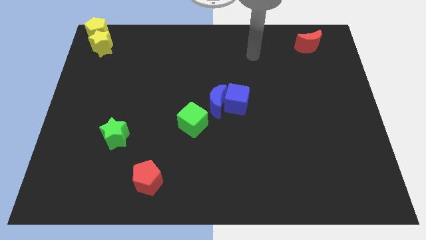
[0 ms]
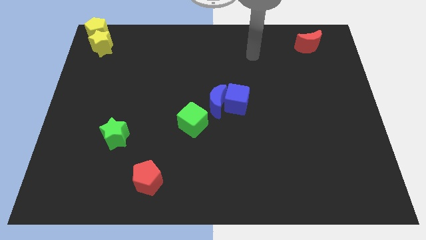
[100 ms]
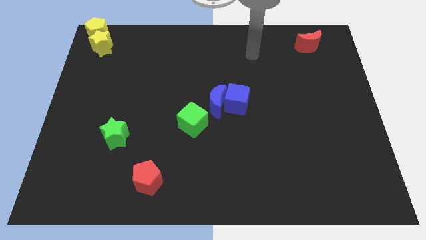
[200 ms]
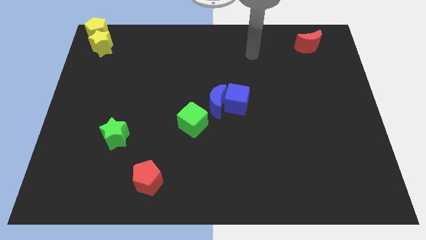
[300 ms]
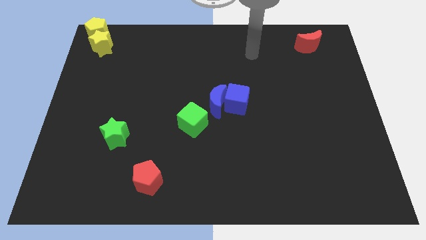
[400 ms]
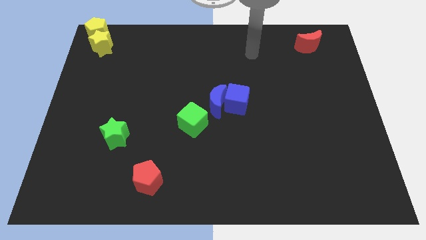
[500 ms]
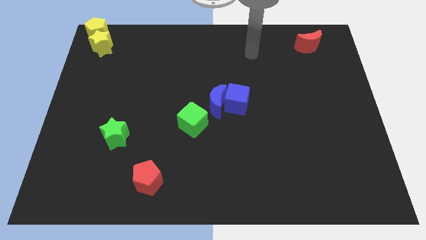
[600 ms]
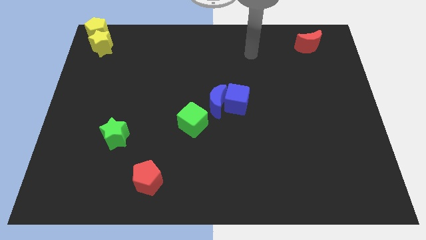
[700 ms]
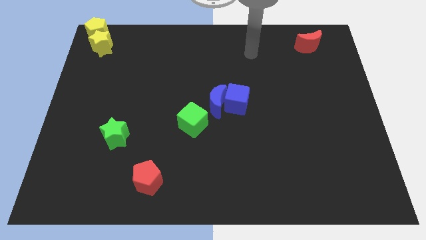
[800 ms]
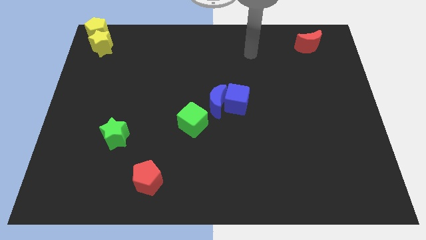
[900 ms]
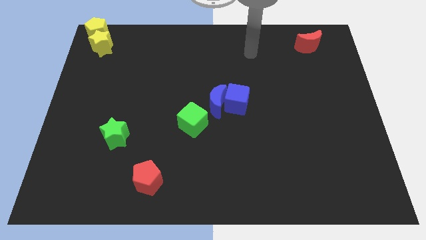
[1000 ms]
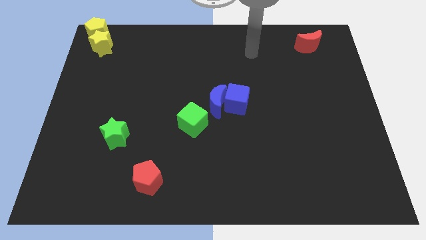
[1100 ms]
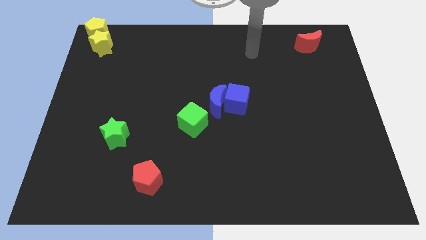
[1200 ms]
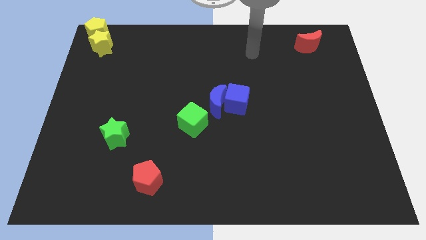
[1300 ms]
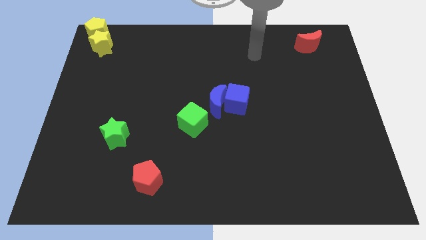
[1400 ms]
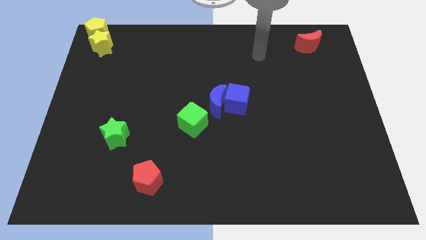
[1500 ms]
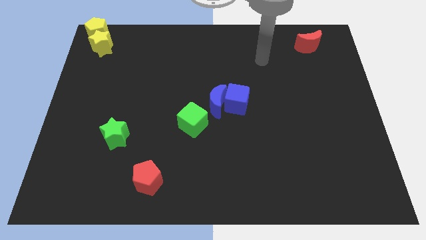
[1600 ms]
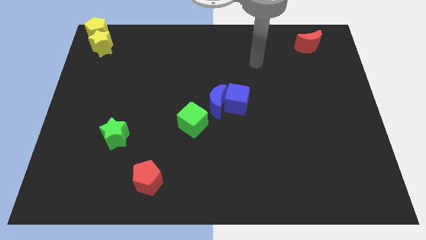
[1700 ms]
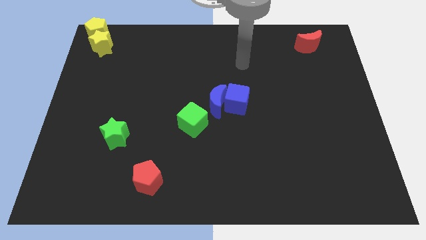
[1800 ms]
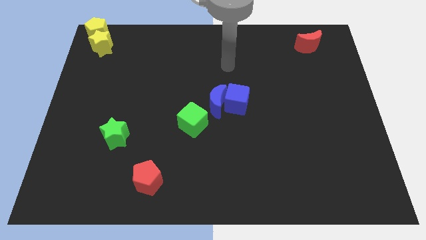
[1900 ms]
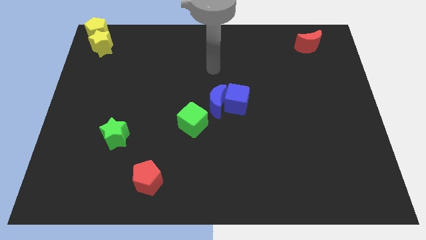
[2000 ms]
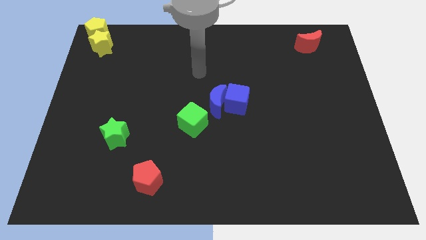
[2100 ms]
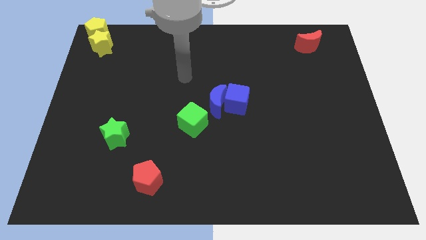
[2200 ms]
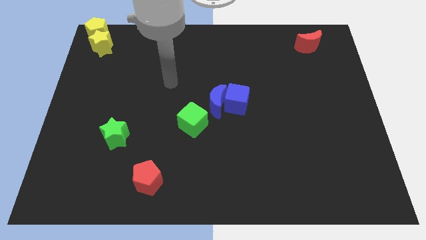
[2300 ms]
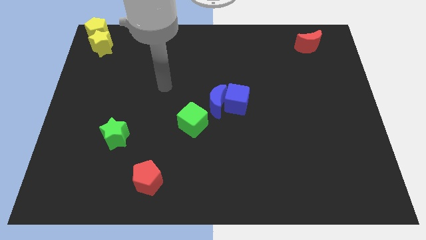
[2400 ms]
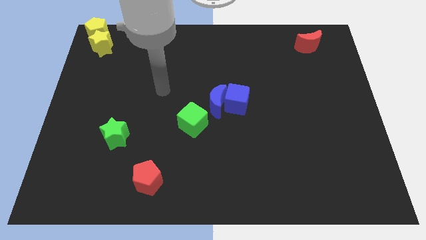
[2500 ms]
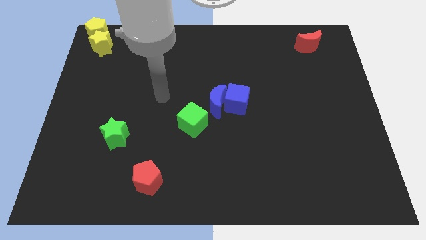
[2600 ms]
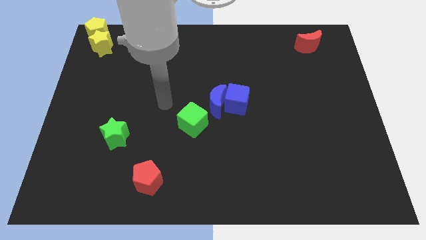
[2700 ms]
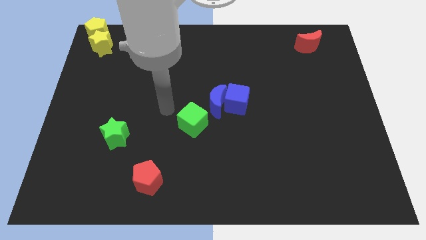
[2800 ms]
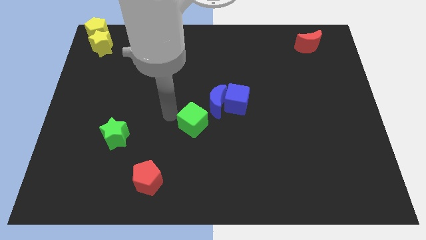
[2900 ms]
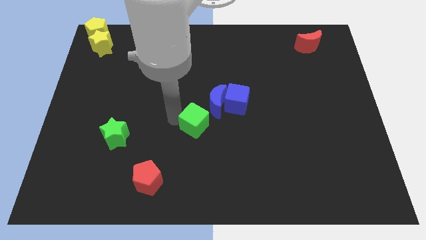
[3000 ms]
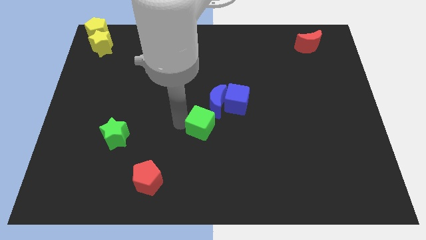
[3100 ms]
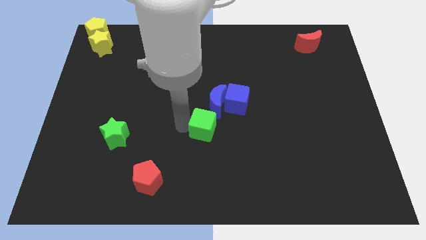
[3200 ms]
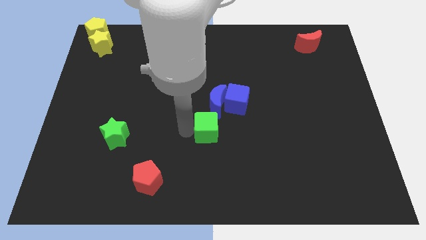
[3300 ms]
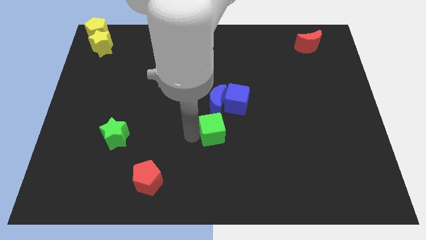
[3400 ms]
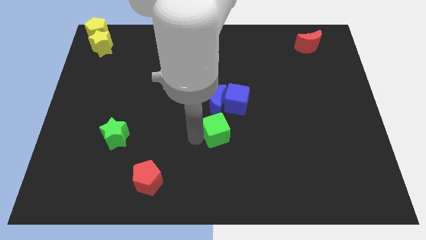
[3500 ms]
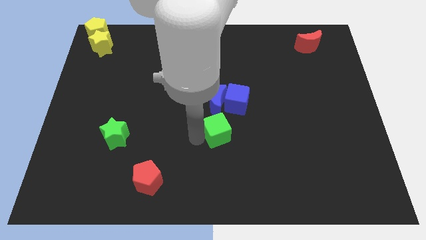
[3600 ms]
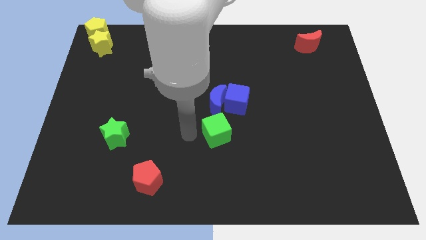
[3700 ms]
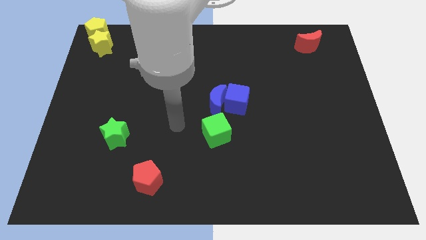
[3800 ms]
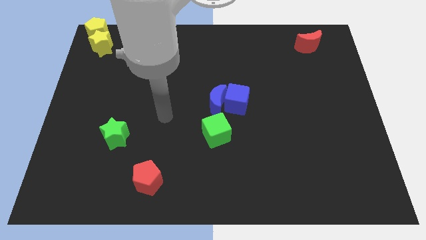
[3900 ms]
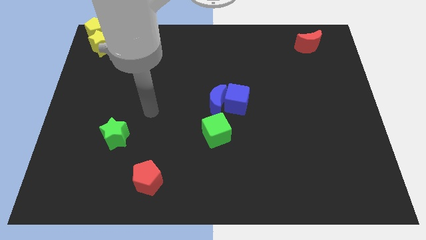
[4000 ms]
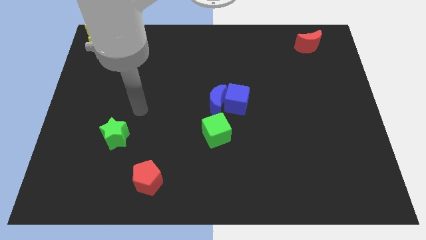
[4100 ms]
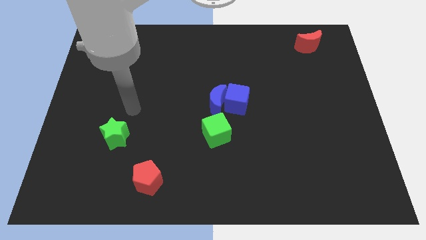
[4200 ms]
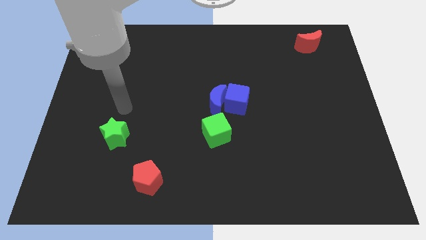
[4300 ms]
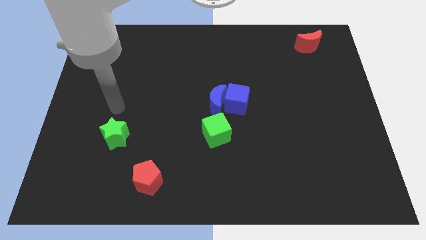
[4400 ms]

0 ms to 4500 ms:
move green cube below the blue moon

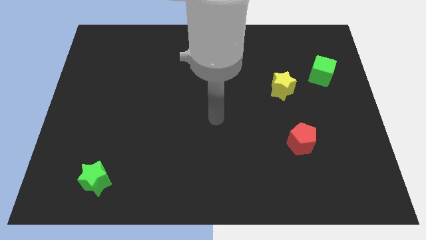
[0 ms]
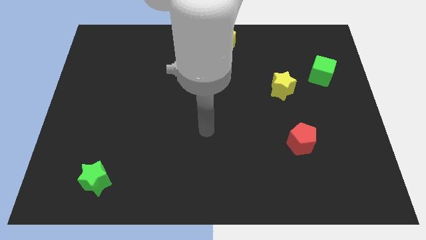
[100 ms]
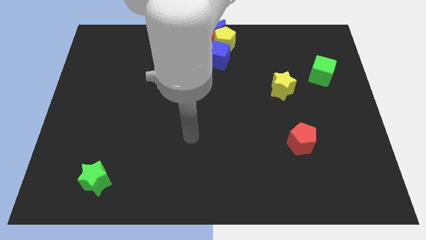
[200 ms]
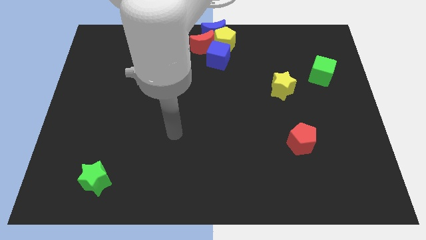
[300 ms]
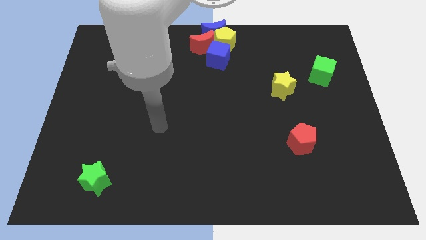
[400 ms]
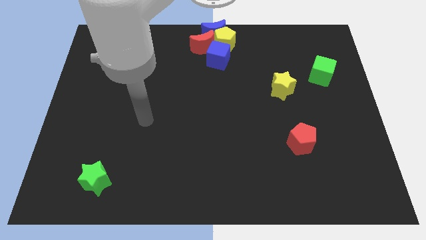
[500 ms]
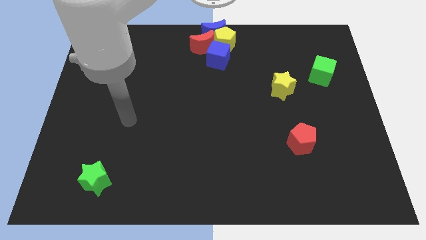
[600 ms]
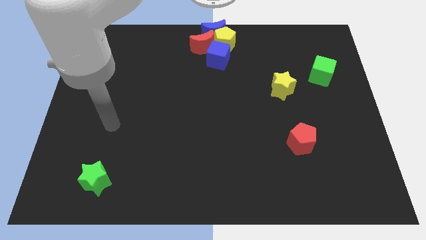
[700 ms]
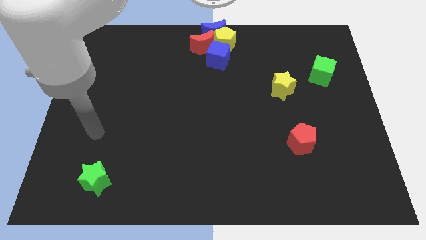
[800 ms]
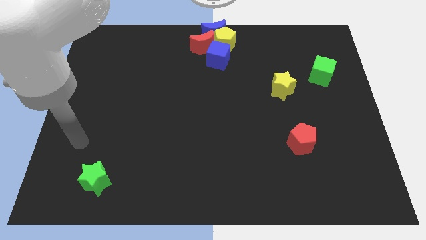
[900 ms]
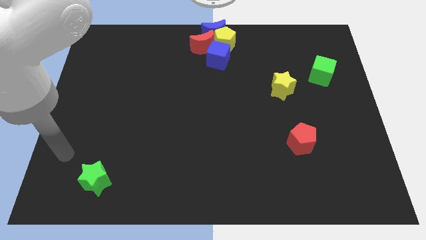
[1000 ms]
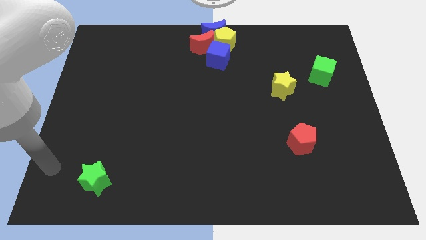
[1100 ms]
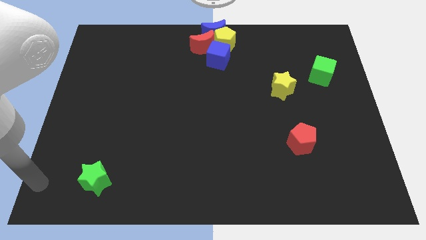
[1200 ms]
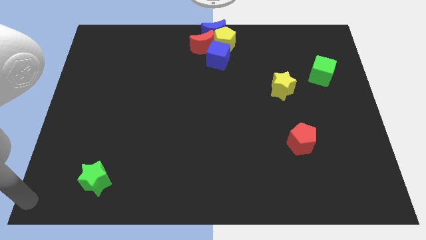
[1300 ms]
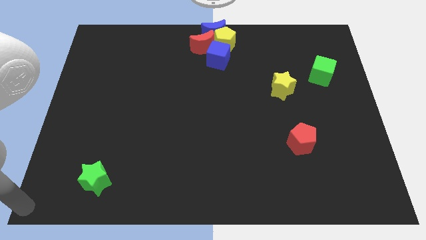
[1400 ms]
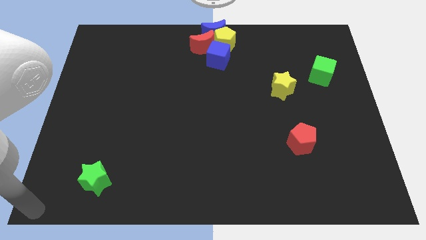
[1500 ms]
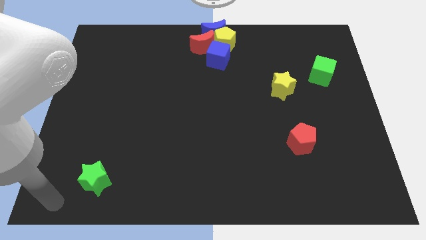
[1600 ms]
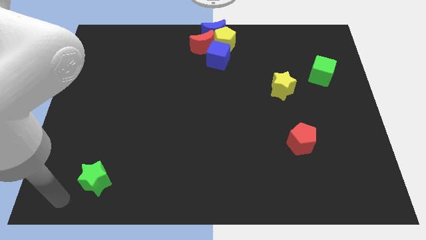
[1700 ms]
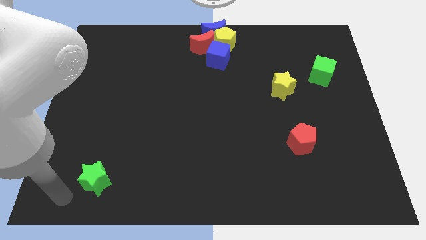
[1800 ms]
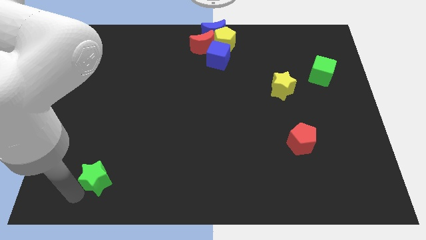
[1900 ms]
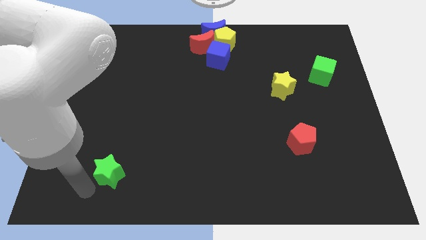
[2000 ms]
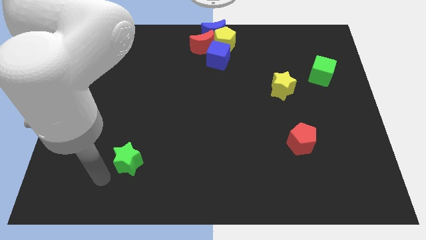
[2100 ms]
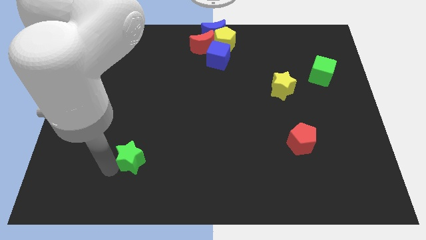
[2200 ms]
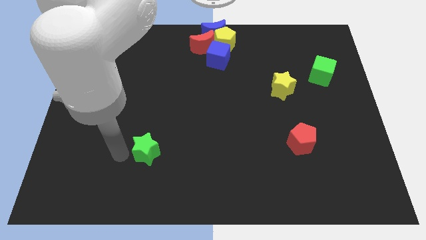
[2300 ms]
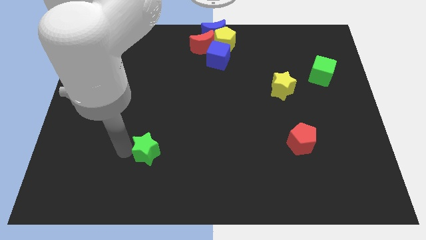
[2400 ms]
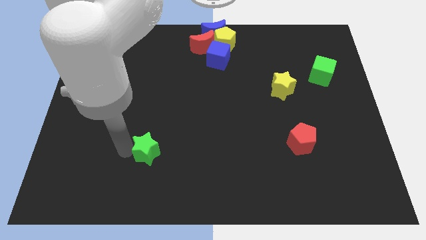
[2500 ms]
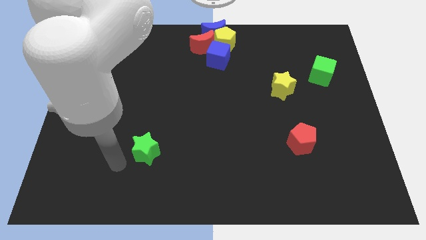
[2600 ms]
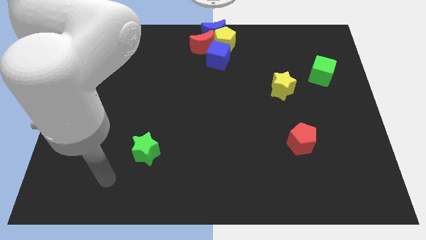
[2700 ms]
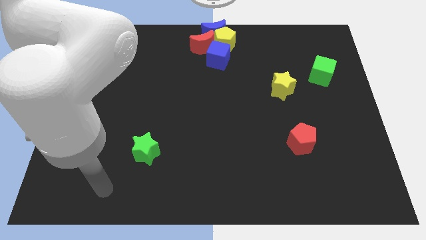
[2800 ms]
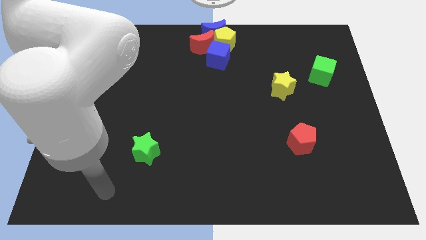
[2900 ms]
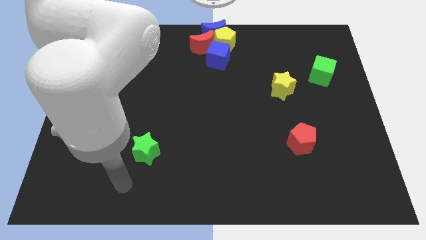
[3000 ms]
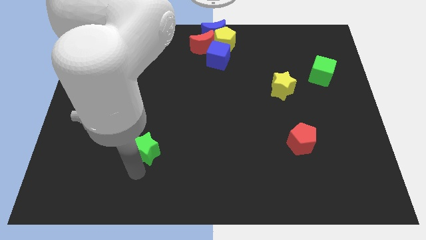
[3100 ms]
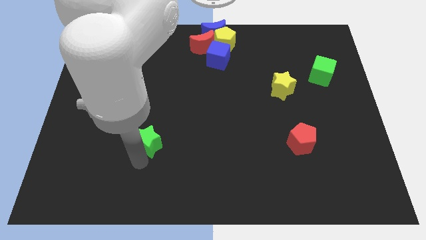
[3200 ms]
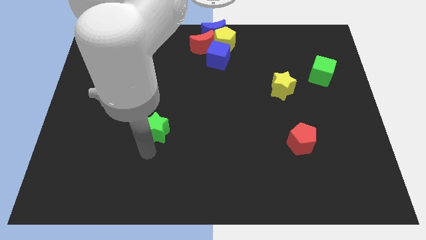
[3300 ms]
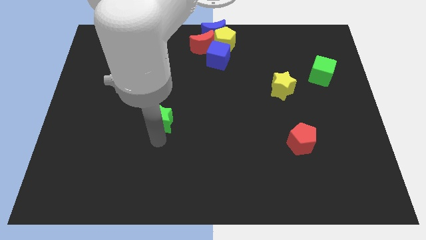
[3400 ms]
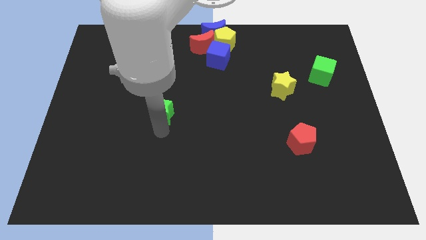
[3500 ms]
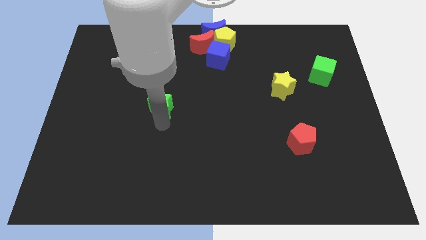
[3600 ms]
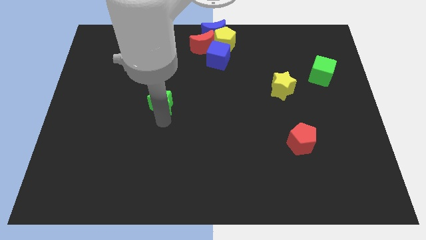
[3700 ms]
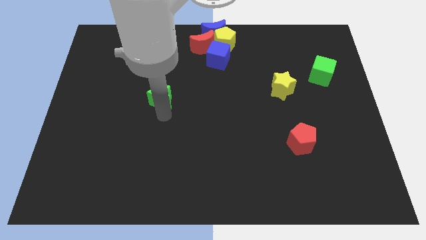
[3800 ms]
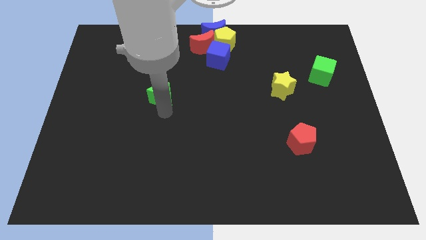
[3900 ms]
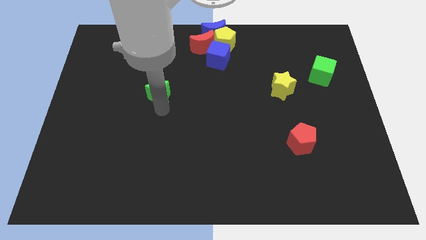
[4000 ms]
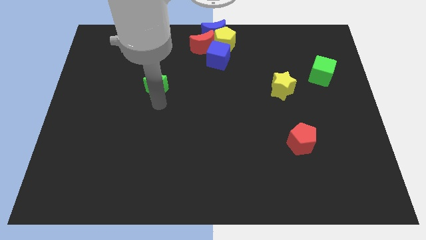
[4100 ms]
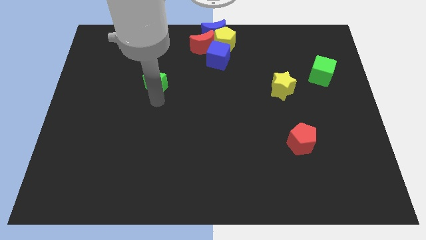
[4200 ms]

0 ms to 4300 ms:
move the green star to the left of the yellow star

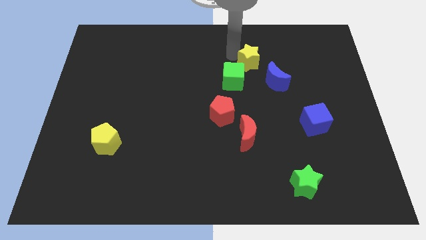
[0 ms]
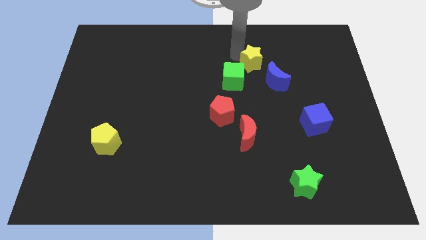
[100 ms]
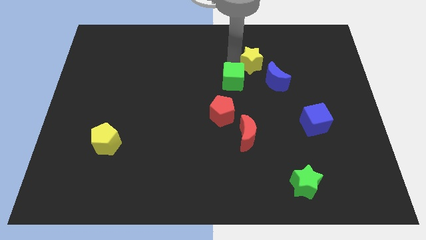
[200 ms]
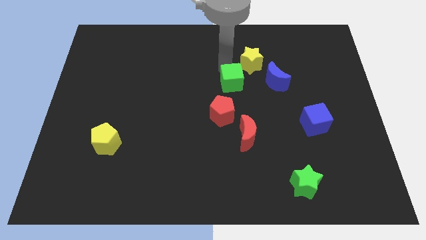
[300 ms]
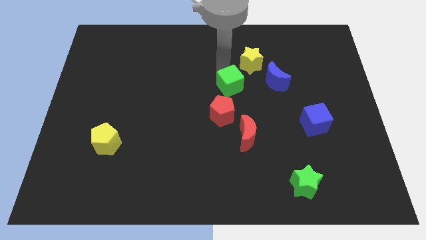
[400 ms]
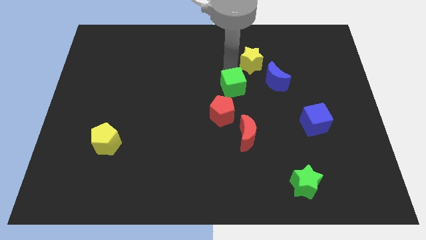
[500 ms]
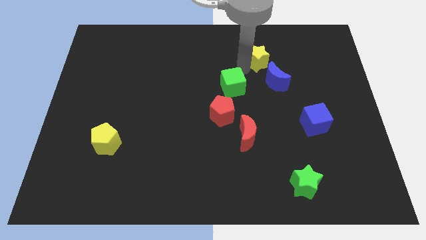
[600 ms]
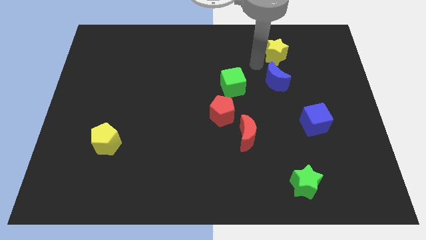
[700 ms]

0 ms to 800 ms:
move yellow star above blue moon
